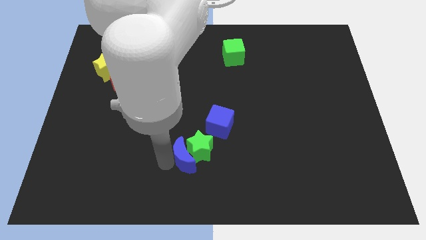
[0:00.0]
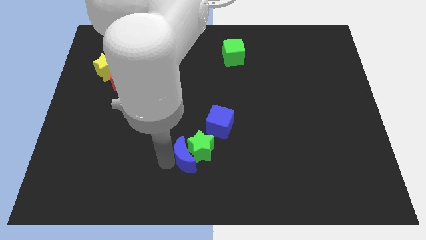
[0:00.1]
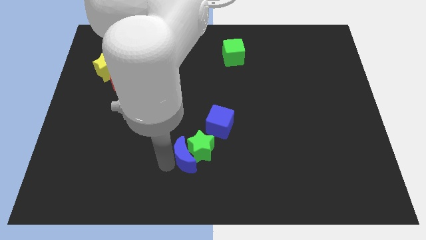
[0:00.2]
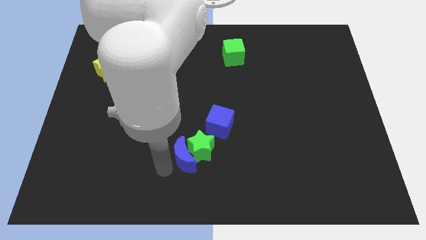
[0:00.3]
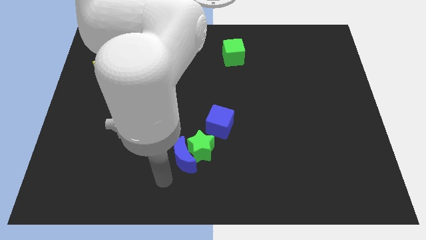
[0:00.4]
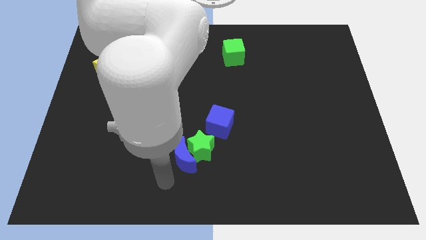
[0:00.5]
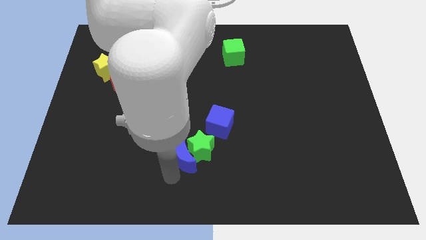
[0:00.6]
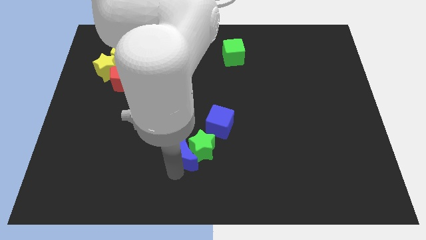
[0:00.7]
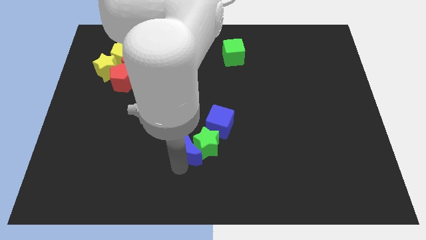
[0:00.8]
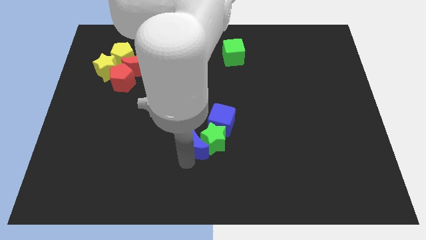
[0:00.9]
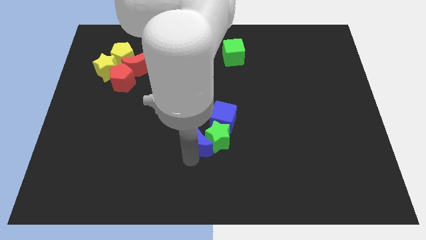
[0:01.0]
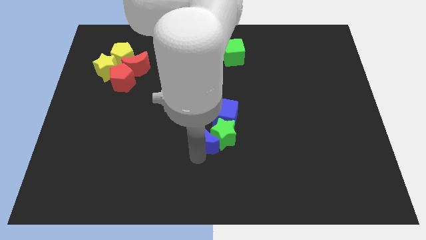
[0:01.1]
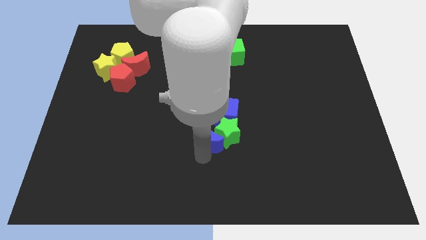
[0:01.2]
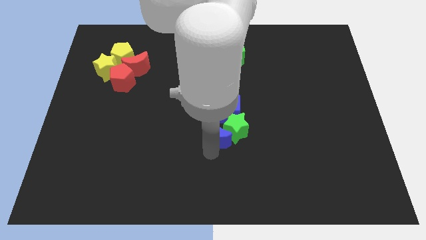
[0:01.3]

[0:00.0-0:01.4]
slide the blue cube green star and the blue moon towards the center

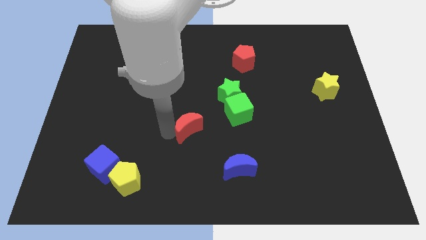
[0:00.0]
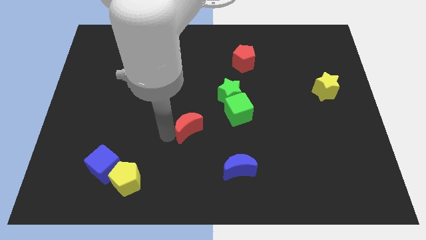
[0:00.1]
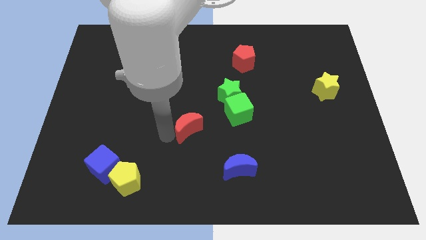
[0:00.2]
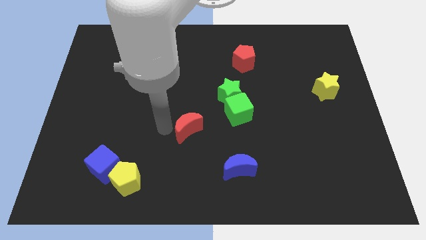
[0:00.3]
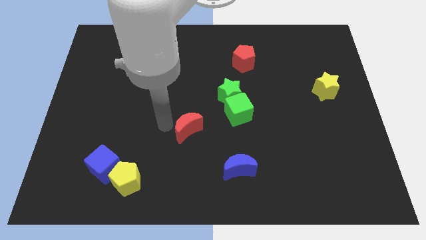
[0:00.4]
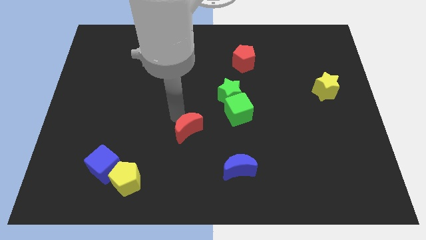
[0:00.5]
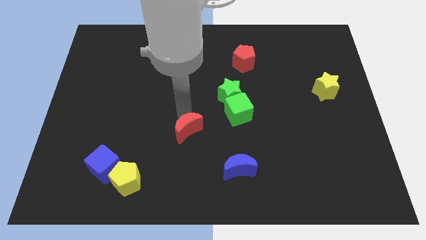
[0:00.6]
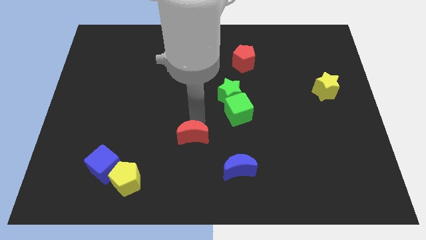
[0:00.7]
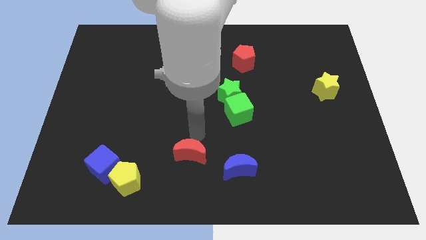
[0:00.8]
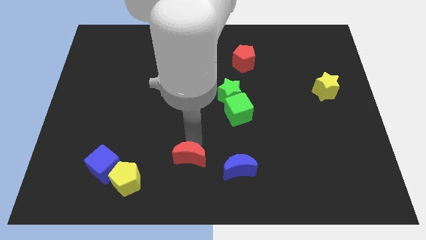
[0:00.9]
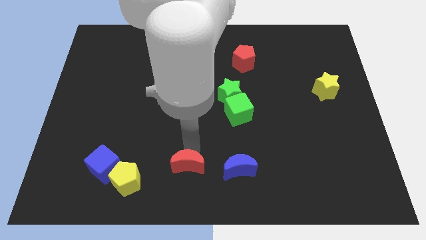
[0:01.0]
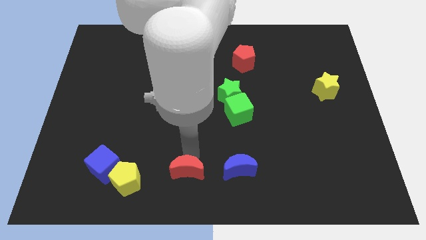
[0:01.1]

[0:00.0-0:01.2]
place the red crescent parallel left to the blue moon

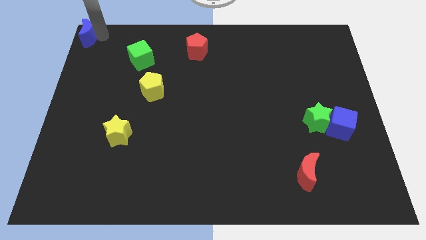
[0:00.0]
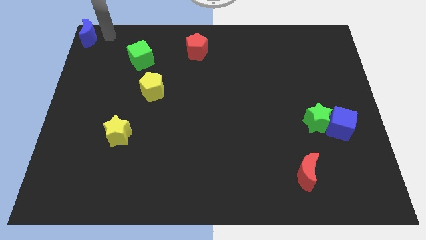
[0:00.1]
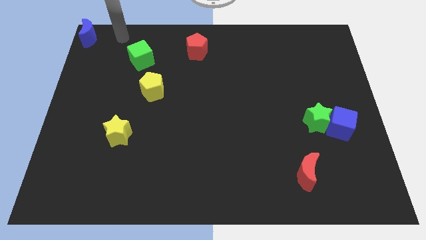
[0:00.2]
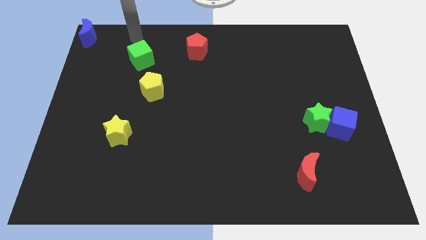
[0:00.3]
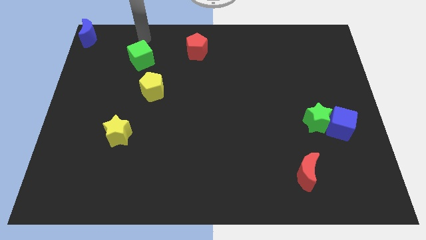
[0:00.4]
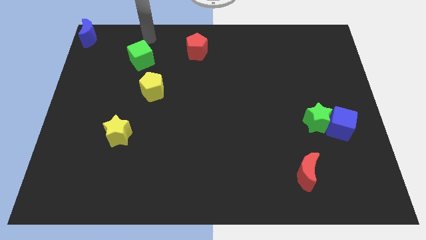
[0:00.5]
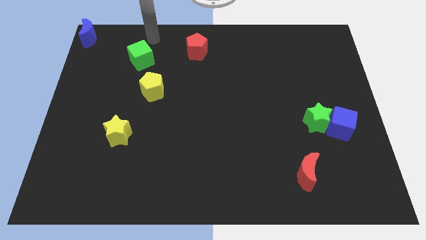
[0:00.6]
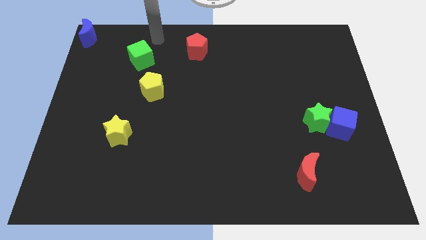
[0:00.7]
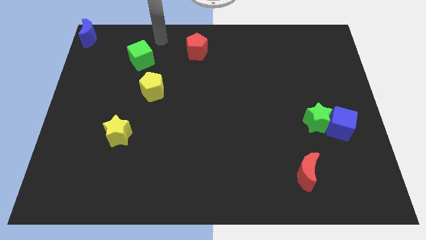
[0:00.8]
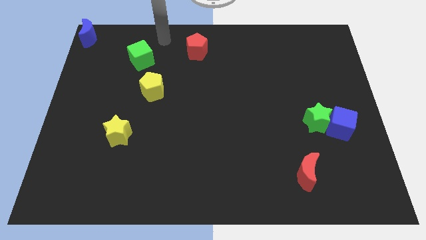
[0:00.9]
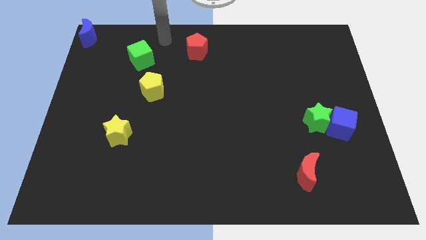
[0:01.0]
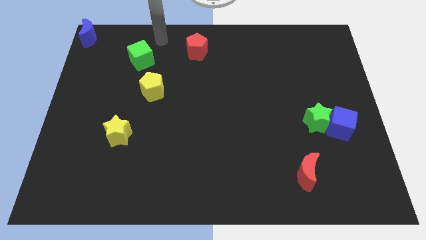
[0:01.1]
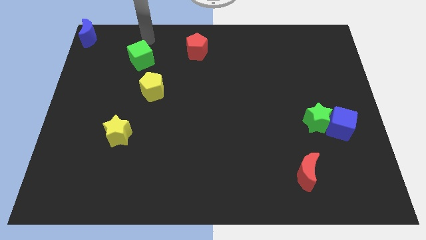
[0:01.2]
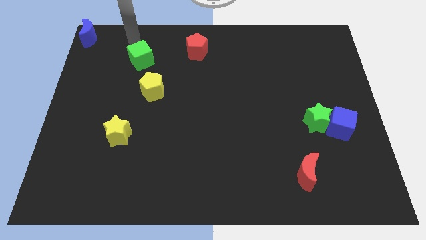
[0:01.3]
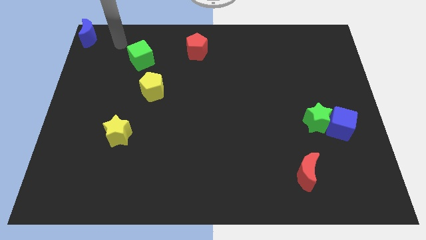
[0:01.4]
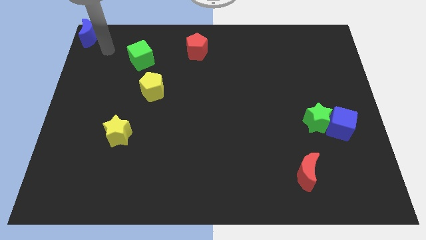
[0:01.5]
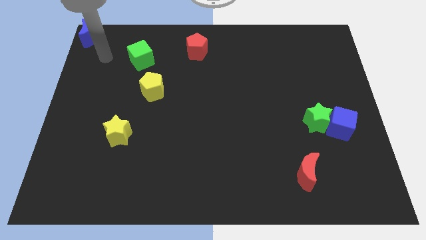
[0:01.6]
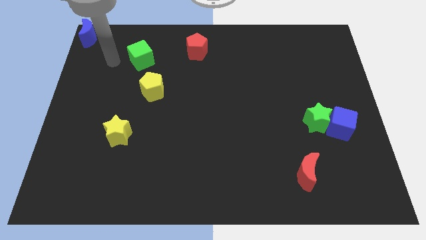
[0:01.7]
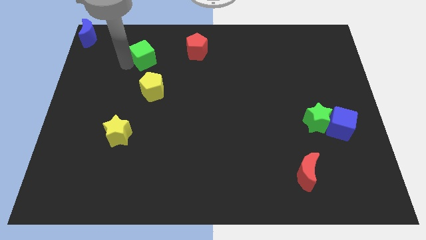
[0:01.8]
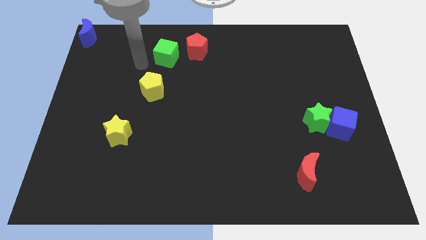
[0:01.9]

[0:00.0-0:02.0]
push the green cube slightly

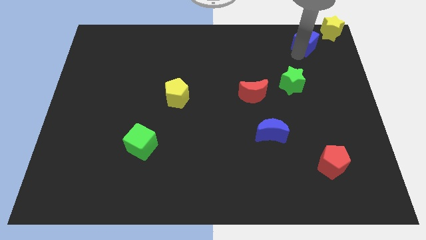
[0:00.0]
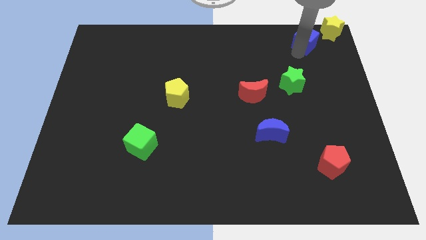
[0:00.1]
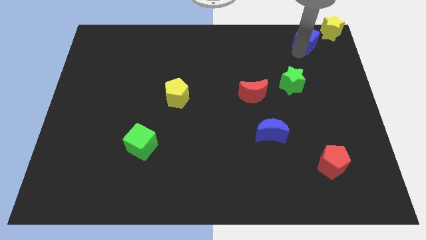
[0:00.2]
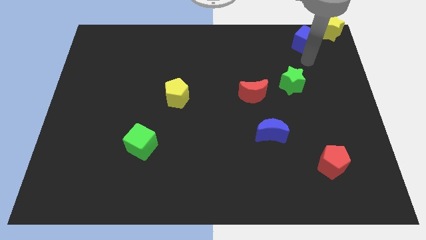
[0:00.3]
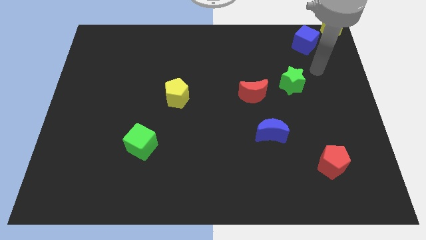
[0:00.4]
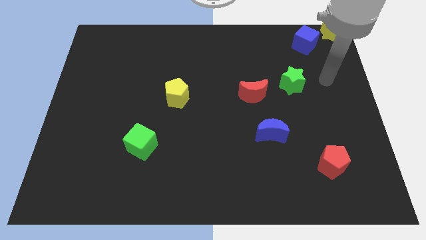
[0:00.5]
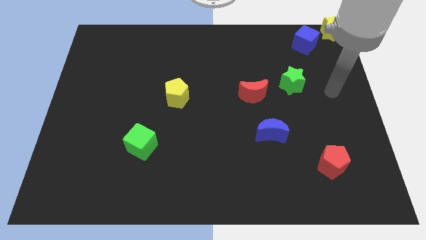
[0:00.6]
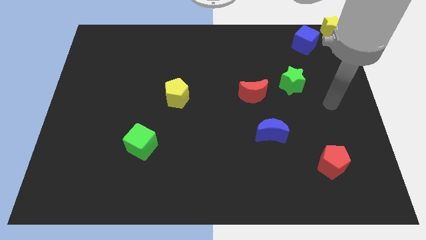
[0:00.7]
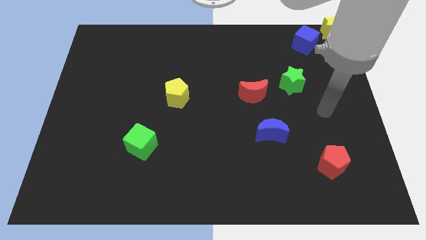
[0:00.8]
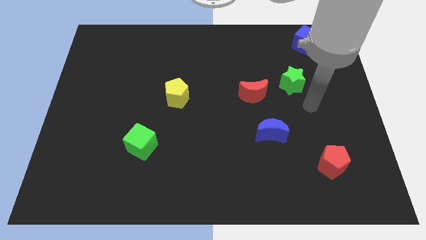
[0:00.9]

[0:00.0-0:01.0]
move the blue cube to the bottom left of the yellow star

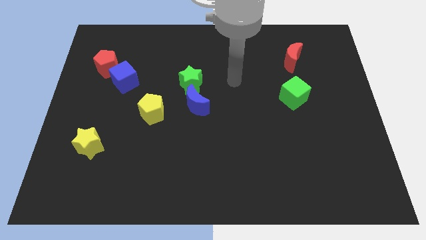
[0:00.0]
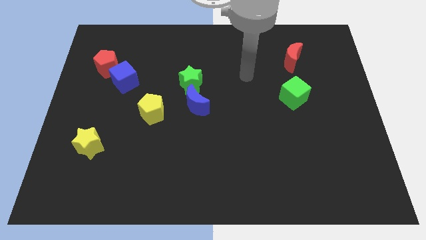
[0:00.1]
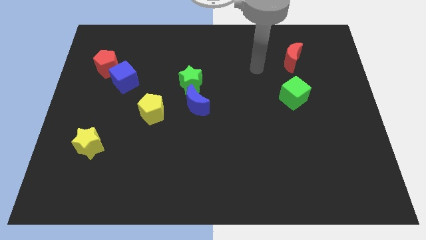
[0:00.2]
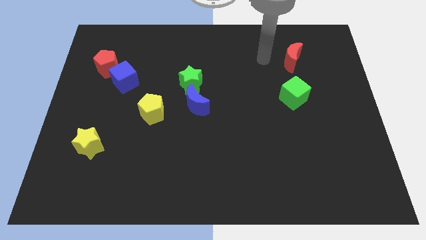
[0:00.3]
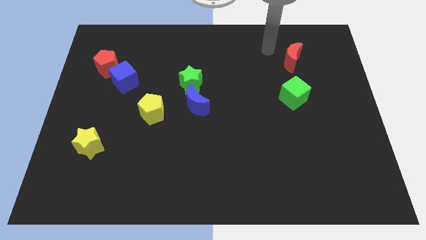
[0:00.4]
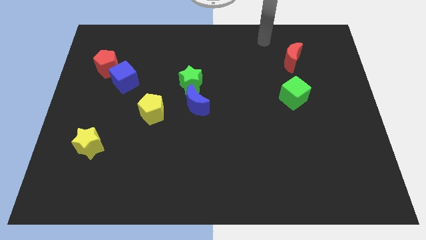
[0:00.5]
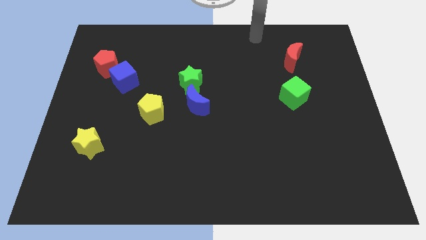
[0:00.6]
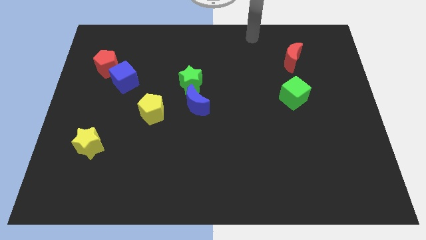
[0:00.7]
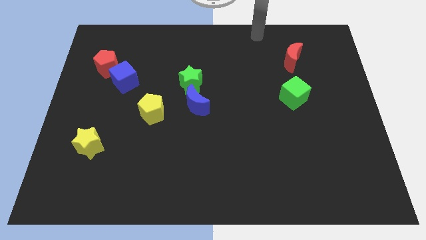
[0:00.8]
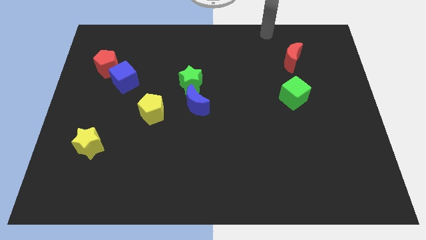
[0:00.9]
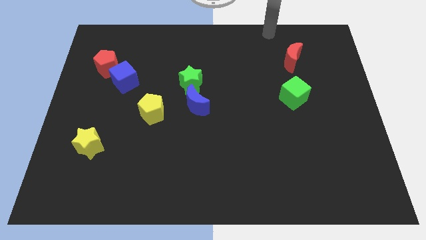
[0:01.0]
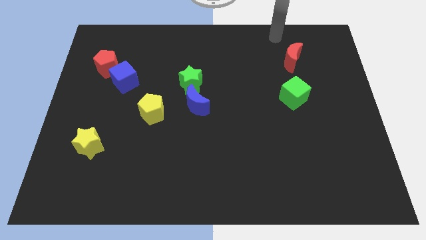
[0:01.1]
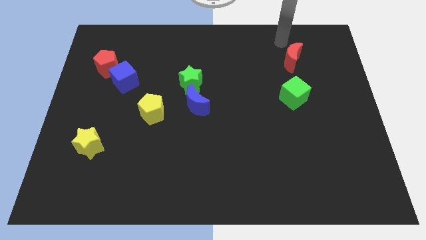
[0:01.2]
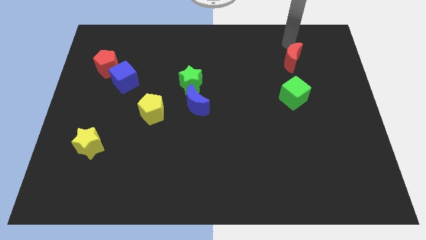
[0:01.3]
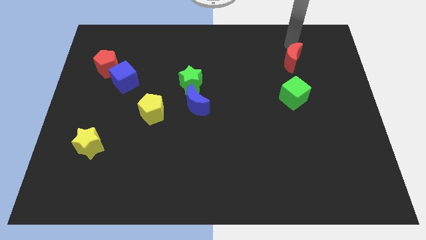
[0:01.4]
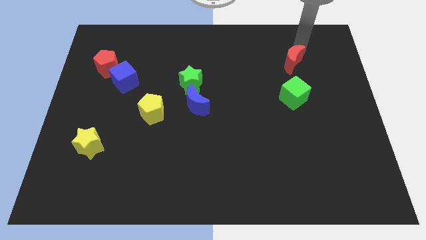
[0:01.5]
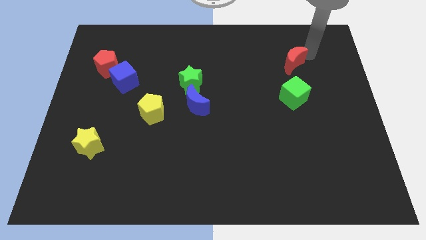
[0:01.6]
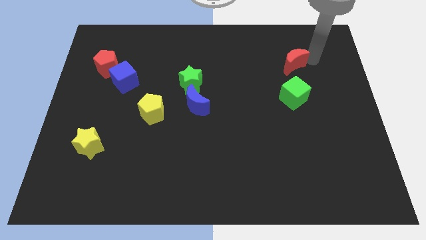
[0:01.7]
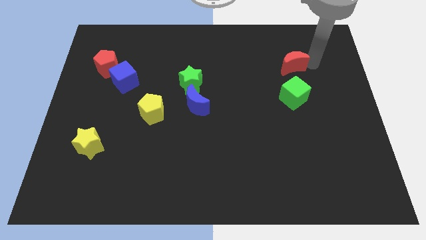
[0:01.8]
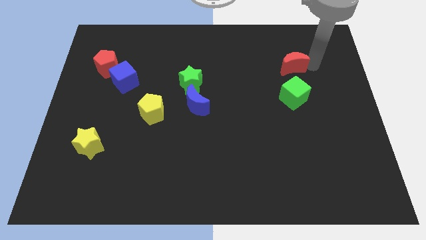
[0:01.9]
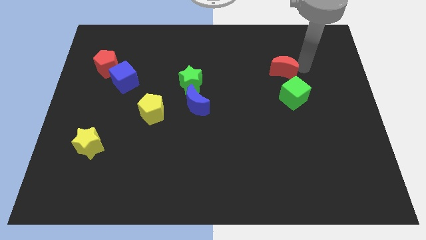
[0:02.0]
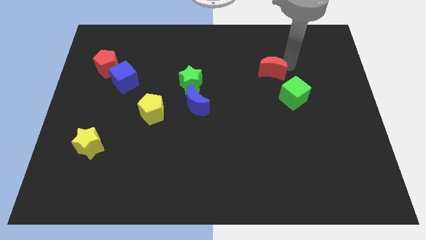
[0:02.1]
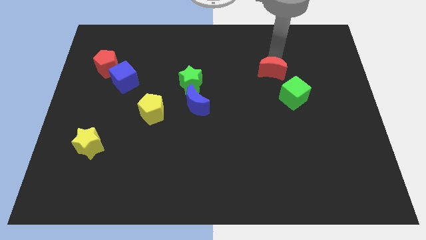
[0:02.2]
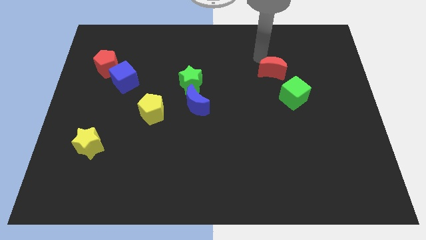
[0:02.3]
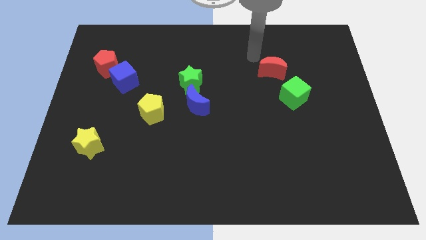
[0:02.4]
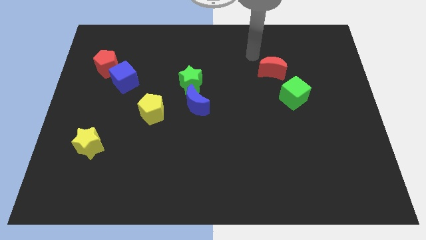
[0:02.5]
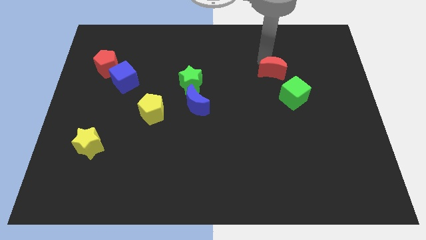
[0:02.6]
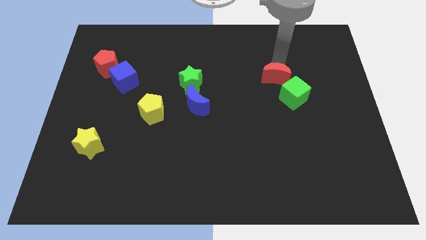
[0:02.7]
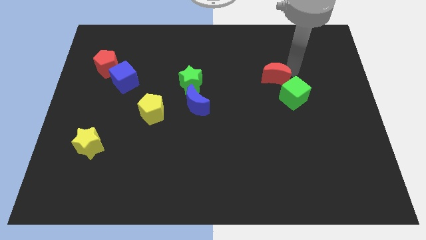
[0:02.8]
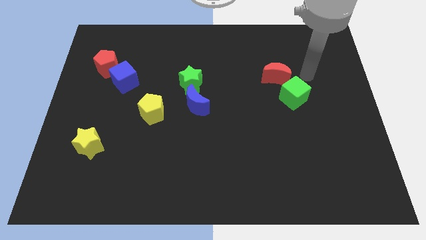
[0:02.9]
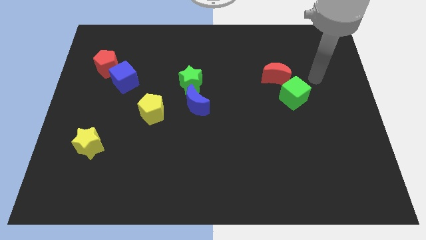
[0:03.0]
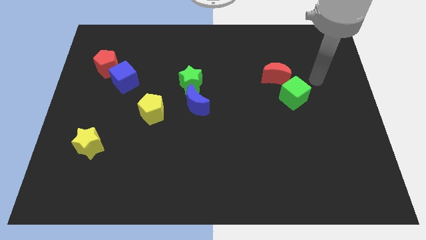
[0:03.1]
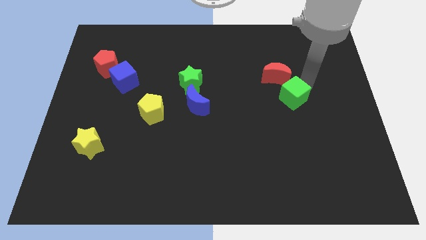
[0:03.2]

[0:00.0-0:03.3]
push the red crescent towards the green cube

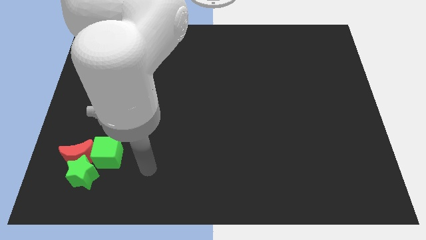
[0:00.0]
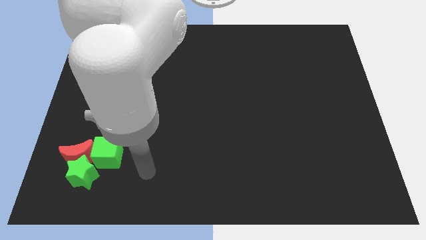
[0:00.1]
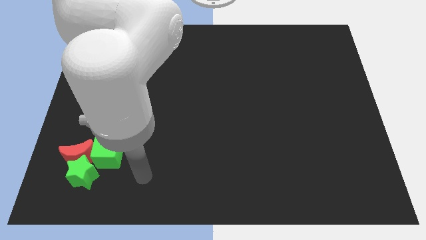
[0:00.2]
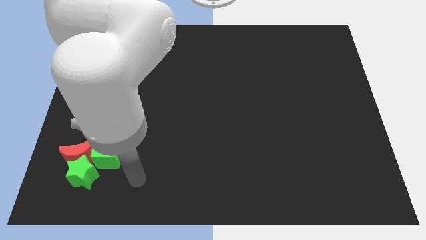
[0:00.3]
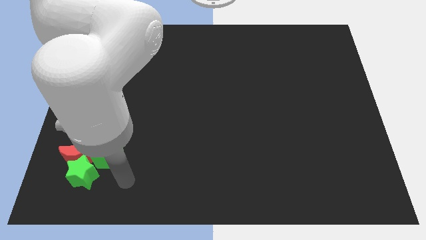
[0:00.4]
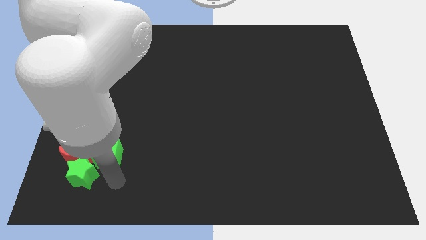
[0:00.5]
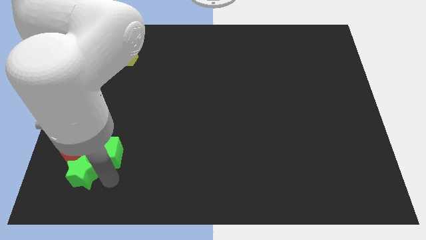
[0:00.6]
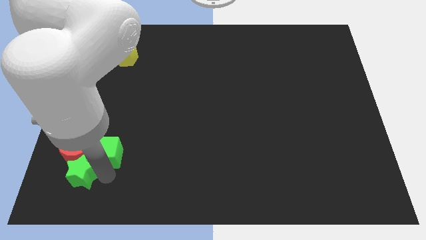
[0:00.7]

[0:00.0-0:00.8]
move your arm to the bottom of the green cube
